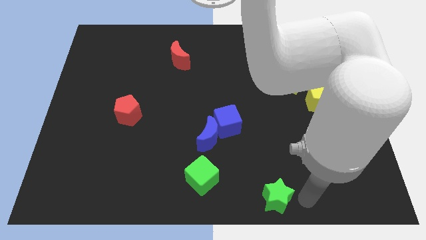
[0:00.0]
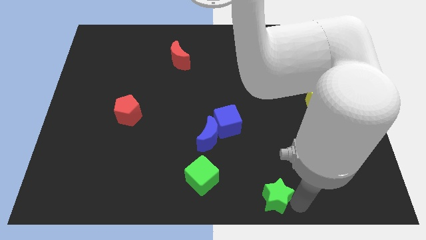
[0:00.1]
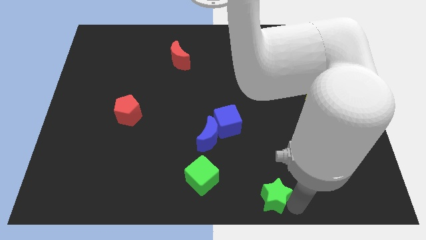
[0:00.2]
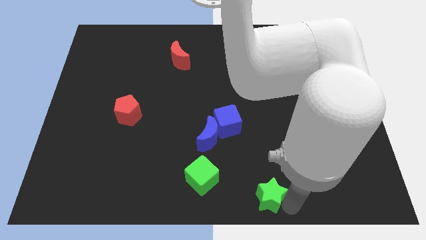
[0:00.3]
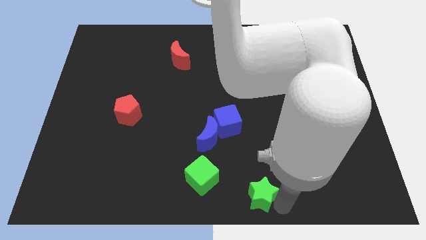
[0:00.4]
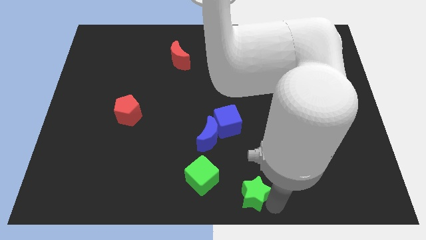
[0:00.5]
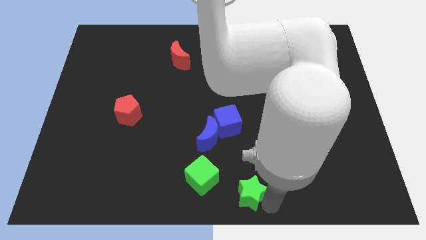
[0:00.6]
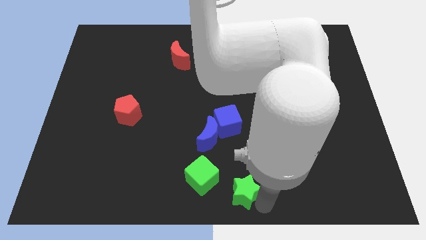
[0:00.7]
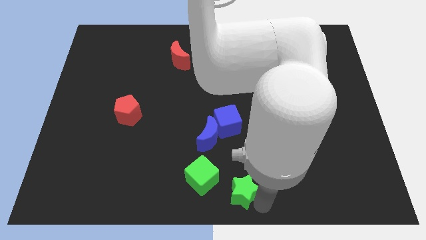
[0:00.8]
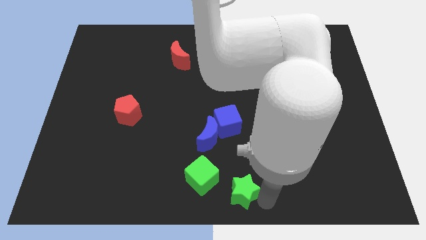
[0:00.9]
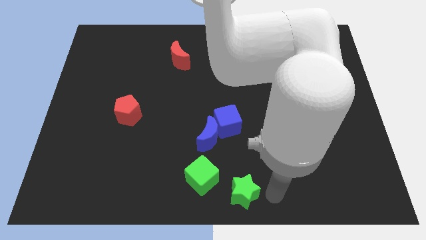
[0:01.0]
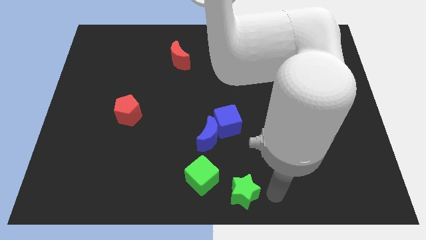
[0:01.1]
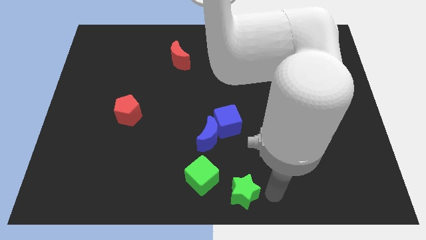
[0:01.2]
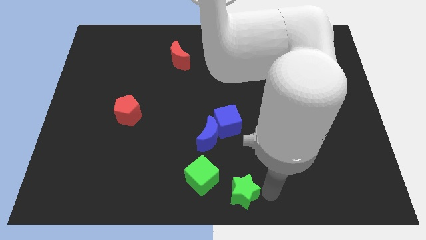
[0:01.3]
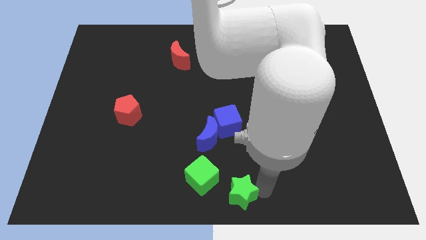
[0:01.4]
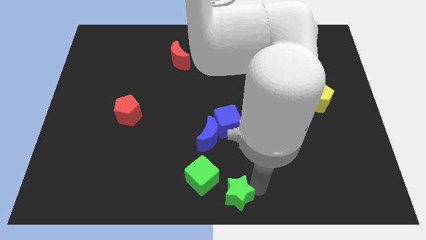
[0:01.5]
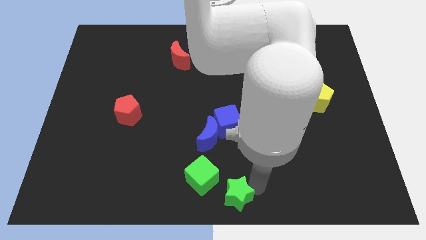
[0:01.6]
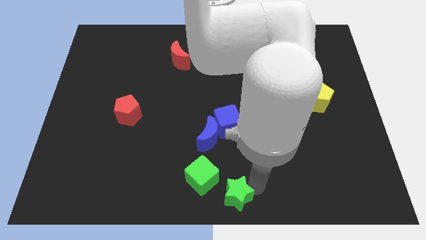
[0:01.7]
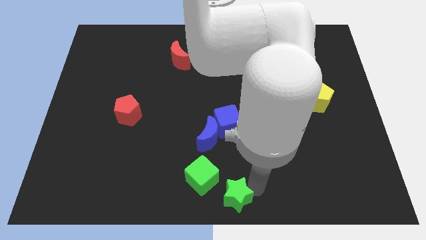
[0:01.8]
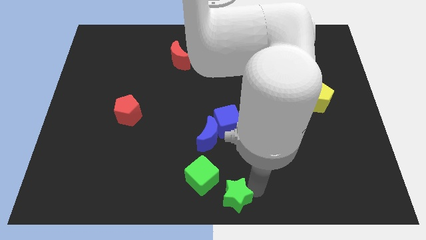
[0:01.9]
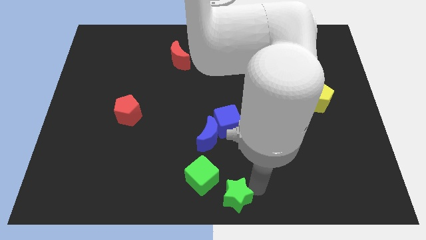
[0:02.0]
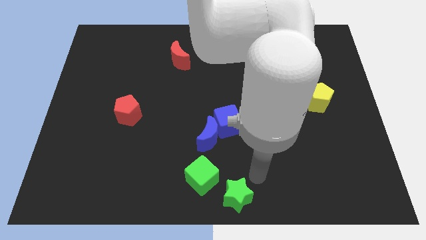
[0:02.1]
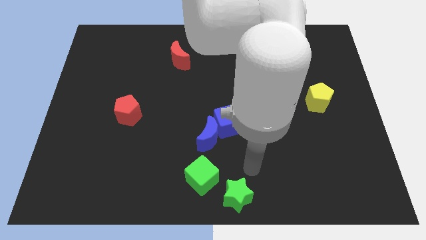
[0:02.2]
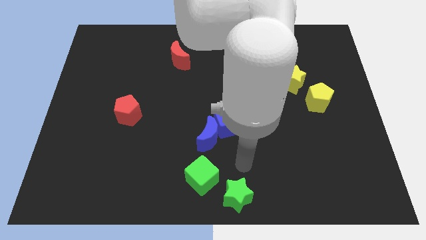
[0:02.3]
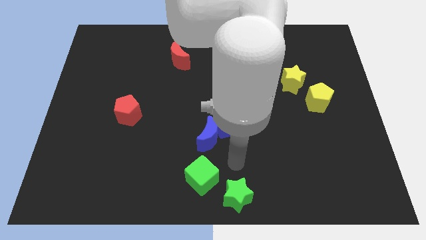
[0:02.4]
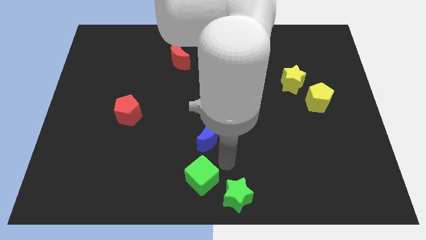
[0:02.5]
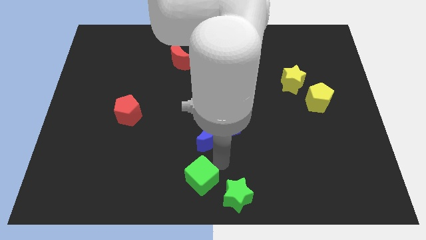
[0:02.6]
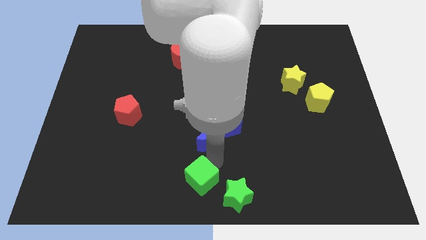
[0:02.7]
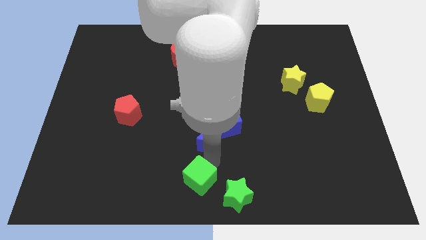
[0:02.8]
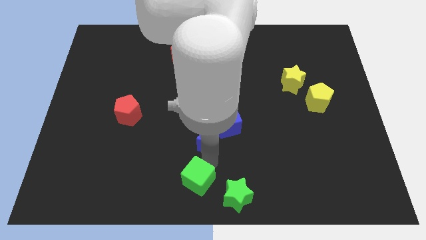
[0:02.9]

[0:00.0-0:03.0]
place green star to the bottom center of the board

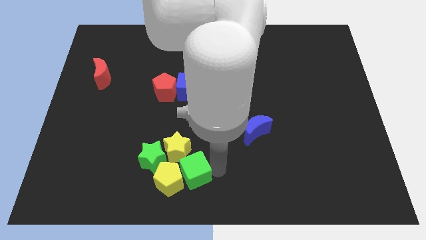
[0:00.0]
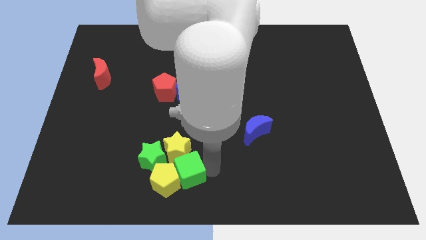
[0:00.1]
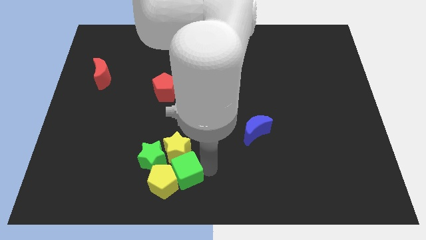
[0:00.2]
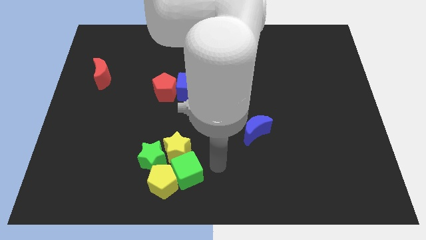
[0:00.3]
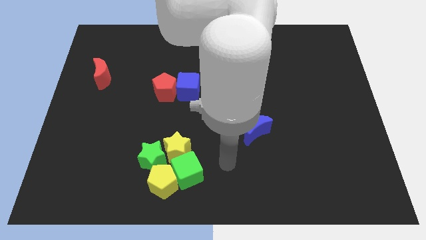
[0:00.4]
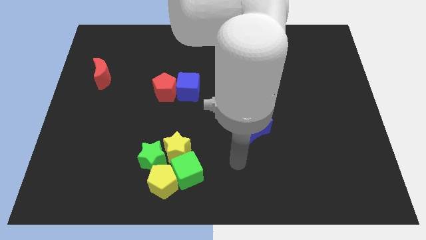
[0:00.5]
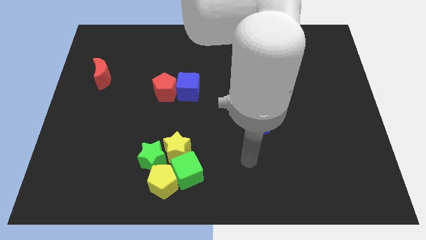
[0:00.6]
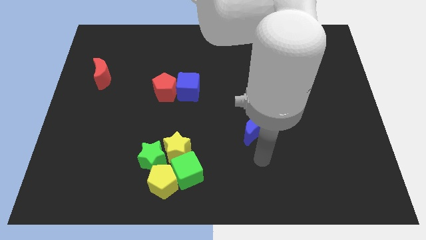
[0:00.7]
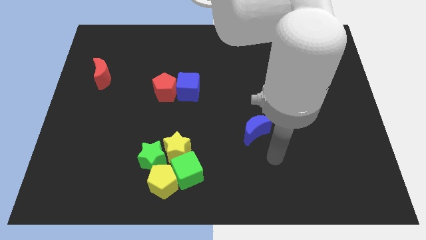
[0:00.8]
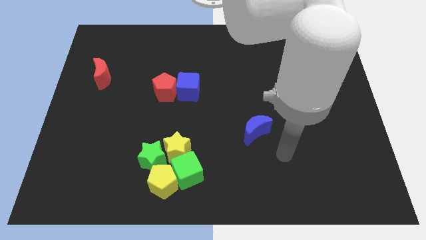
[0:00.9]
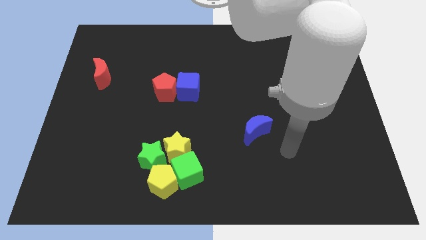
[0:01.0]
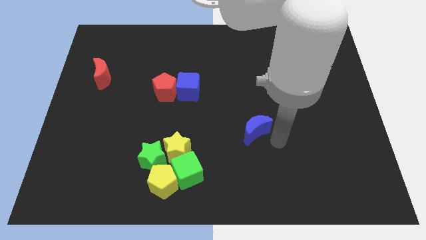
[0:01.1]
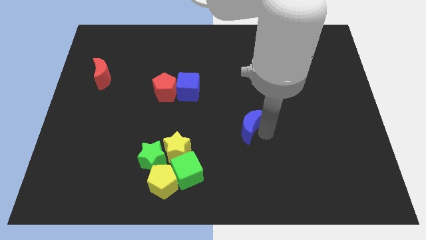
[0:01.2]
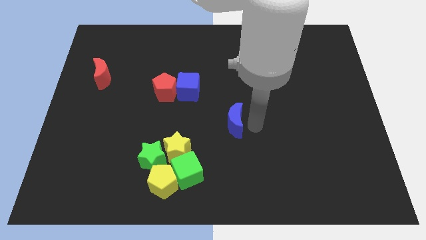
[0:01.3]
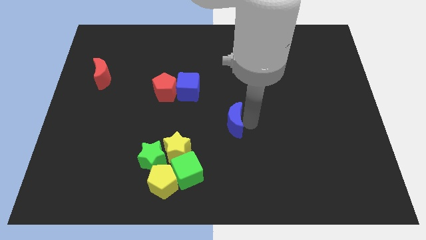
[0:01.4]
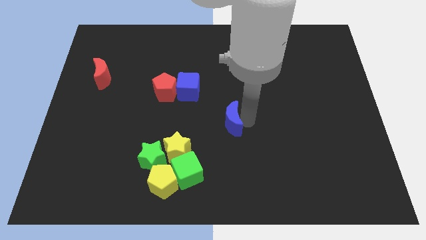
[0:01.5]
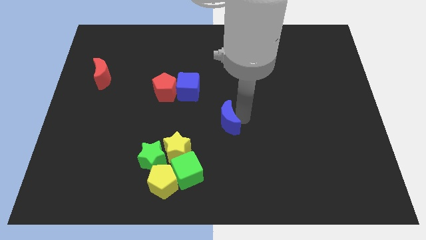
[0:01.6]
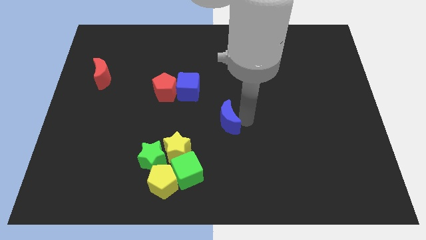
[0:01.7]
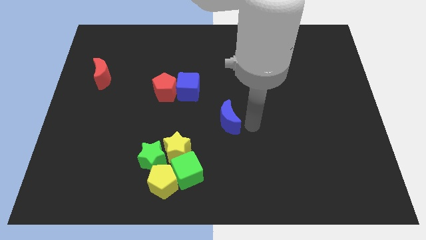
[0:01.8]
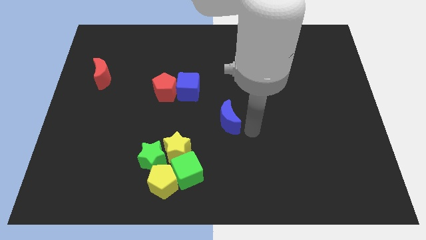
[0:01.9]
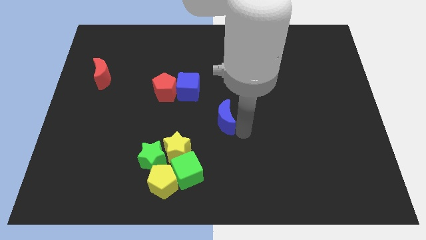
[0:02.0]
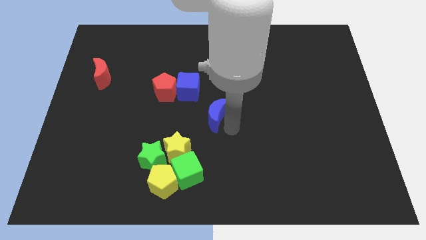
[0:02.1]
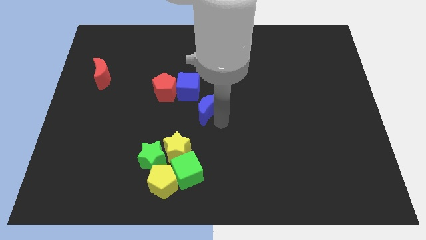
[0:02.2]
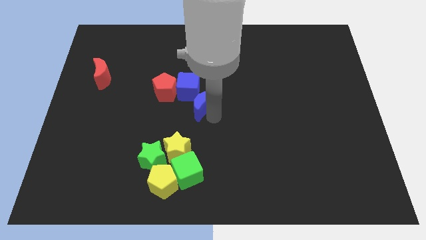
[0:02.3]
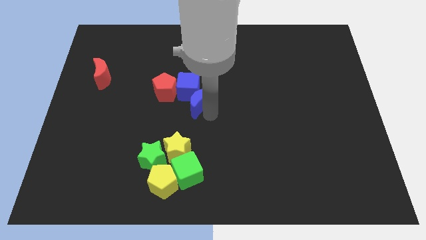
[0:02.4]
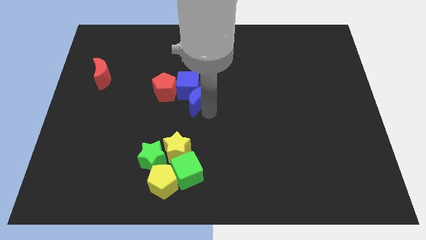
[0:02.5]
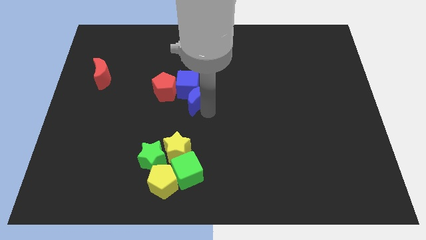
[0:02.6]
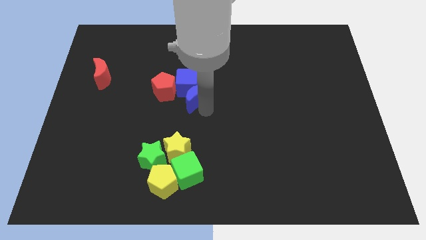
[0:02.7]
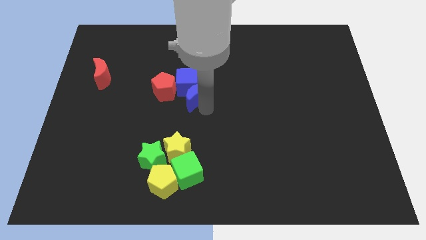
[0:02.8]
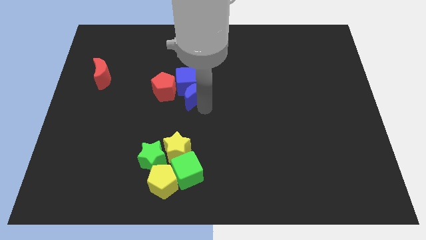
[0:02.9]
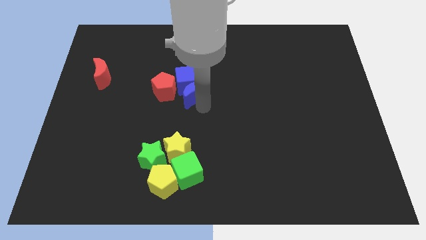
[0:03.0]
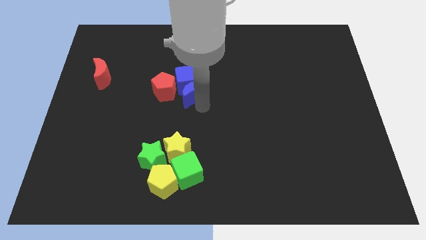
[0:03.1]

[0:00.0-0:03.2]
move blue moon into blue cube

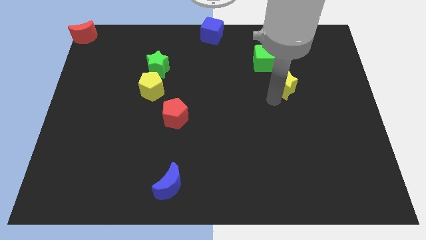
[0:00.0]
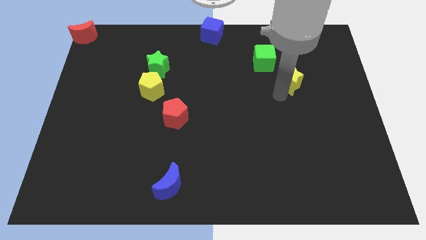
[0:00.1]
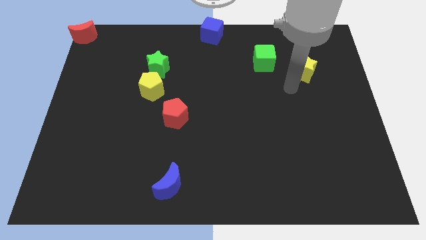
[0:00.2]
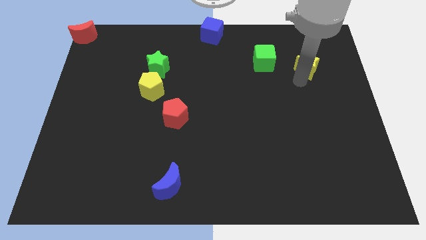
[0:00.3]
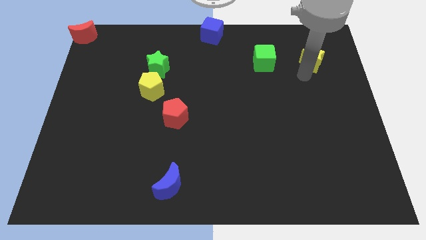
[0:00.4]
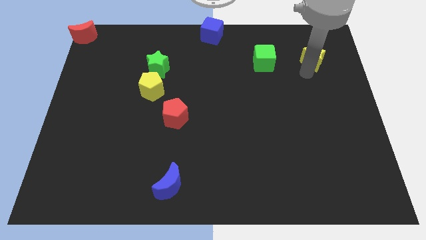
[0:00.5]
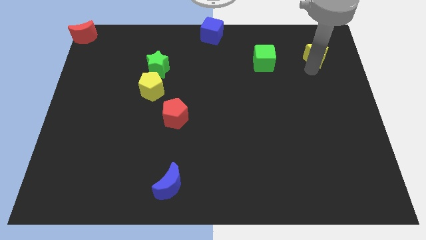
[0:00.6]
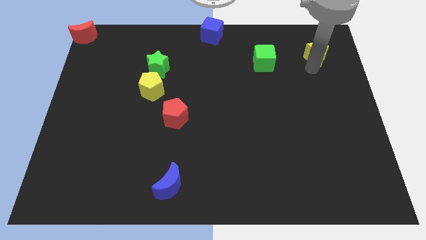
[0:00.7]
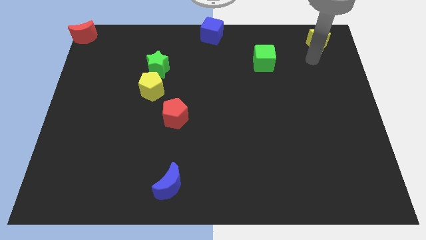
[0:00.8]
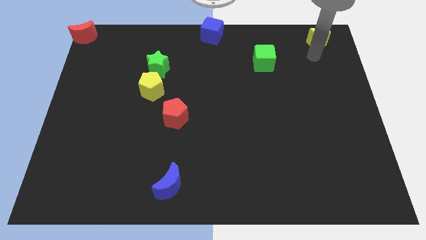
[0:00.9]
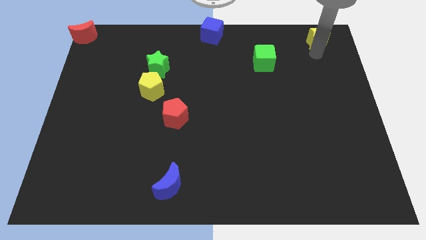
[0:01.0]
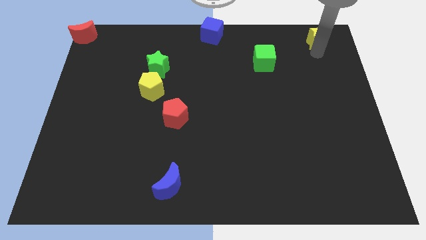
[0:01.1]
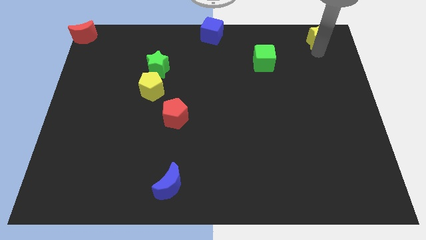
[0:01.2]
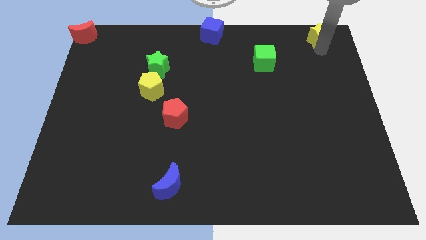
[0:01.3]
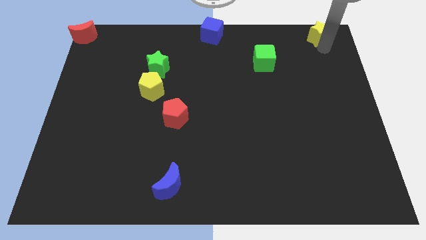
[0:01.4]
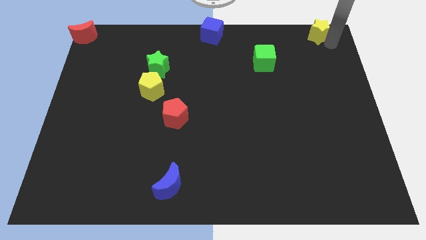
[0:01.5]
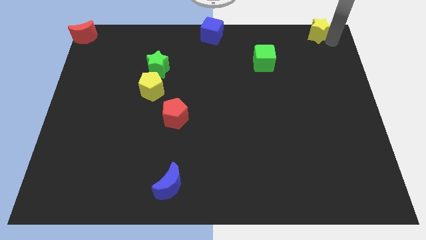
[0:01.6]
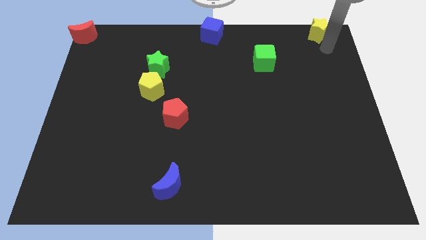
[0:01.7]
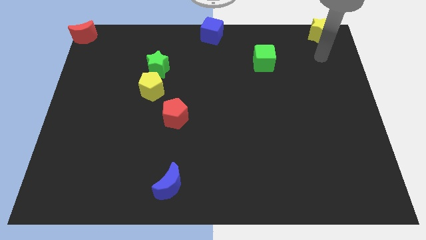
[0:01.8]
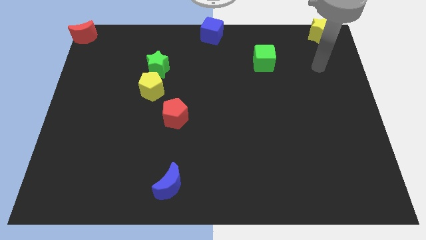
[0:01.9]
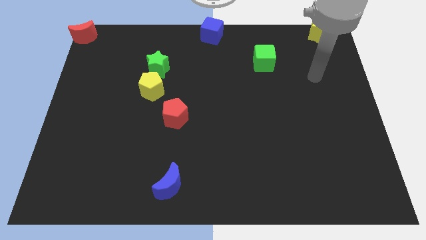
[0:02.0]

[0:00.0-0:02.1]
slide yellow start to the top right

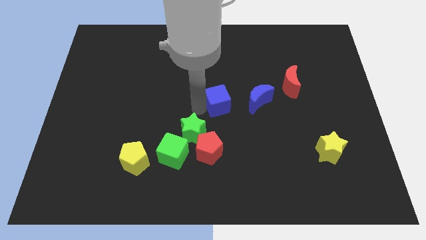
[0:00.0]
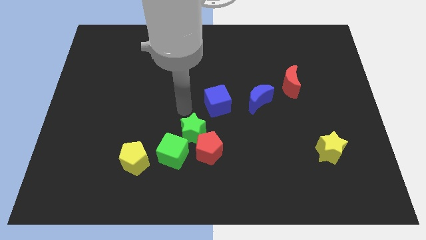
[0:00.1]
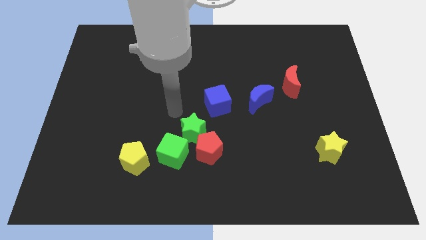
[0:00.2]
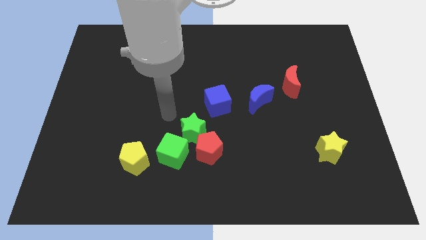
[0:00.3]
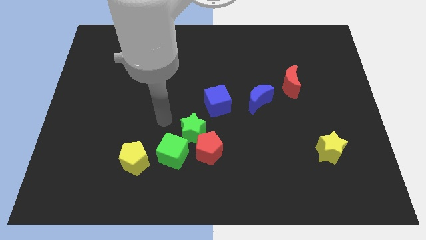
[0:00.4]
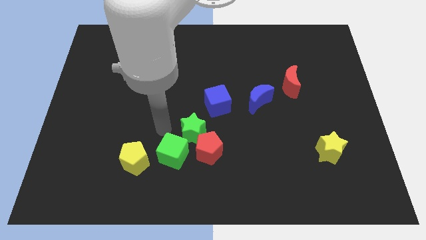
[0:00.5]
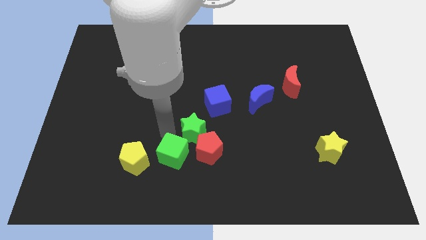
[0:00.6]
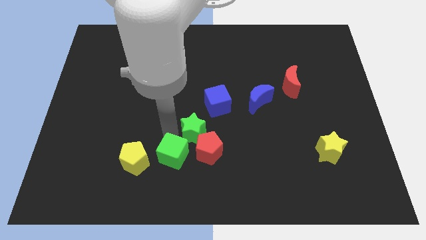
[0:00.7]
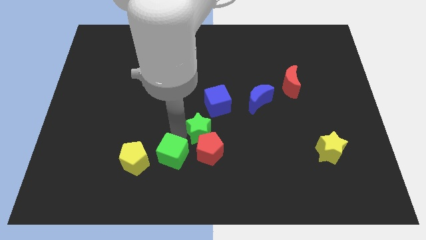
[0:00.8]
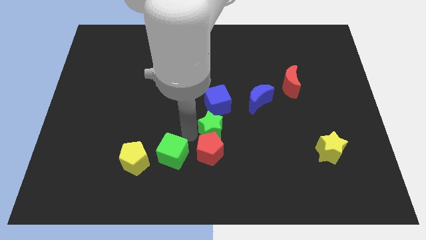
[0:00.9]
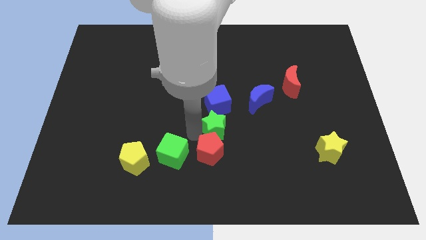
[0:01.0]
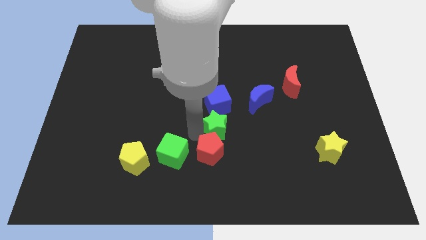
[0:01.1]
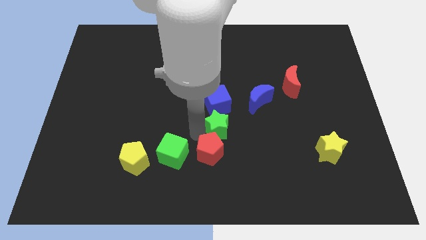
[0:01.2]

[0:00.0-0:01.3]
place green star below blue cube
